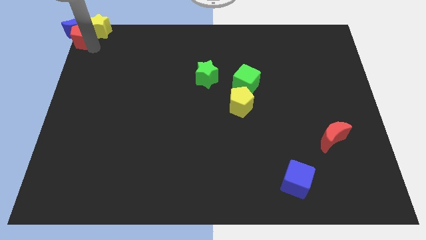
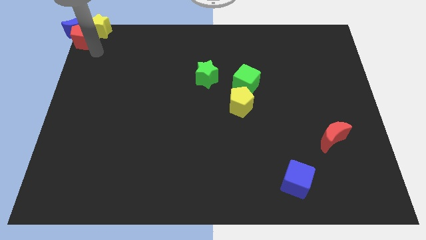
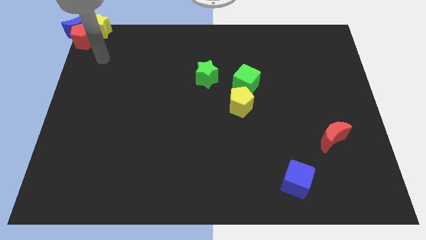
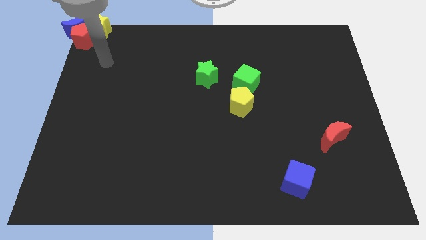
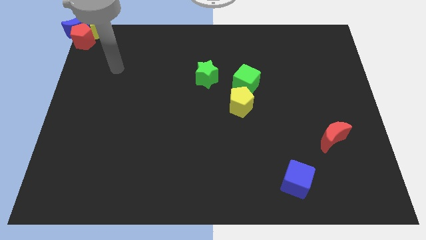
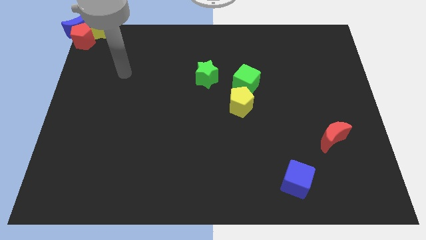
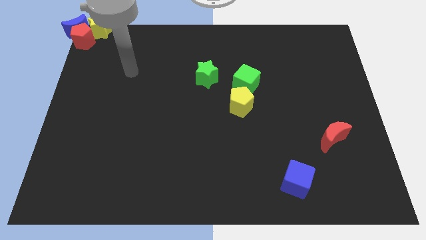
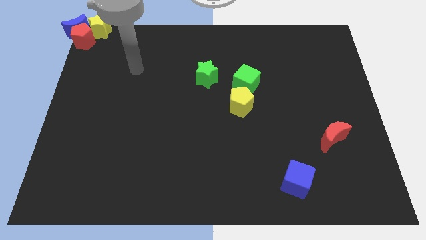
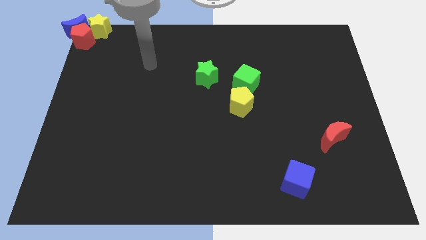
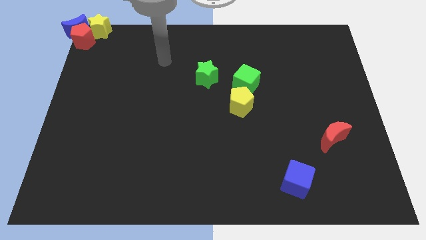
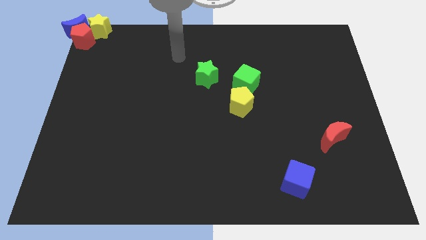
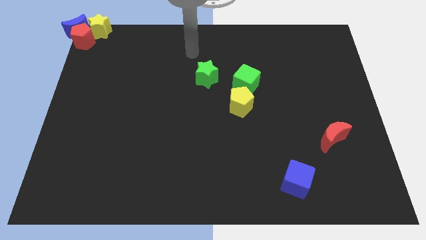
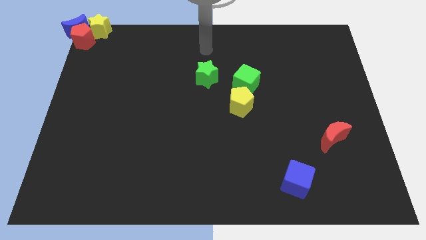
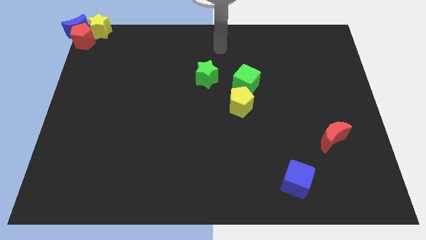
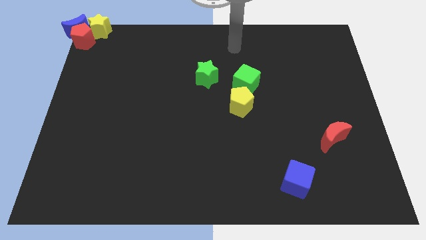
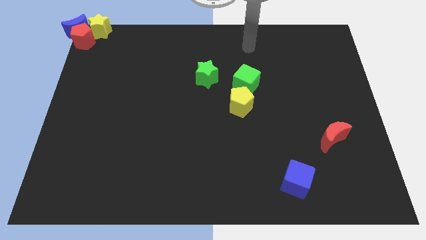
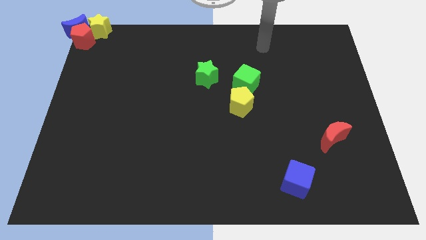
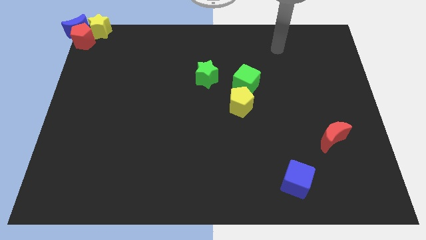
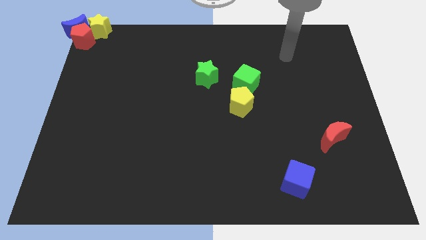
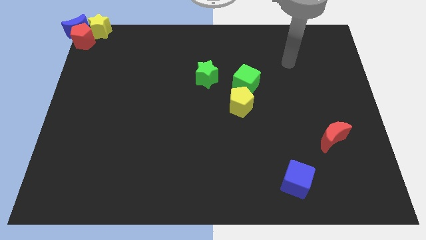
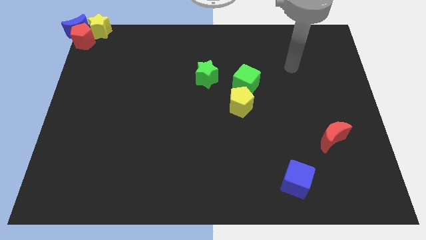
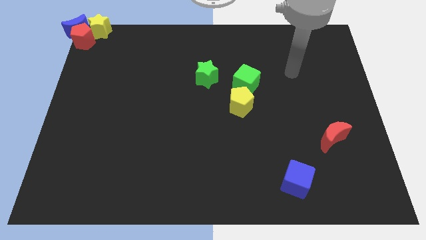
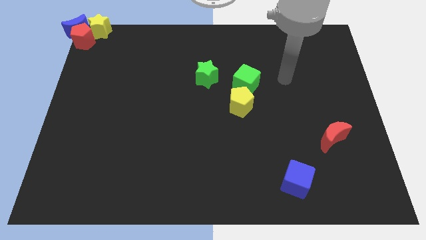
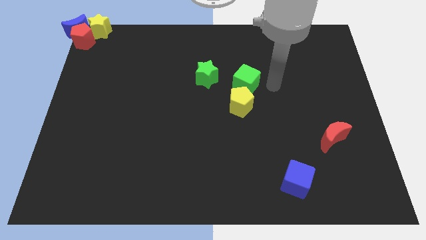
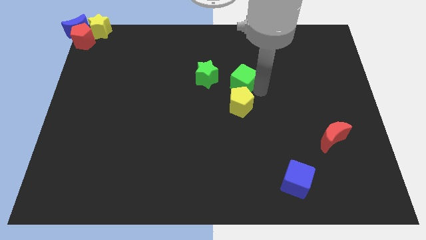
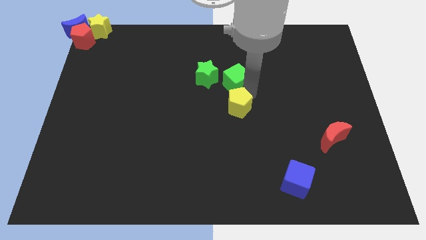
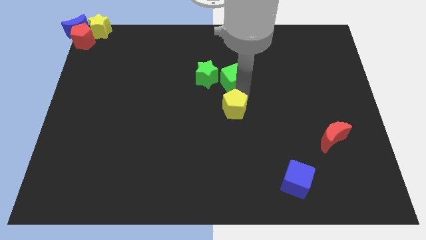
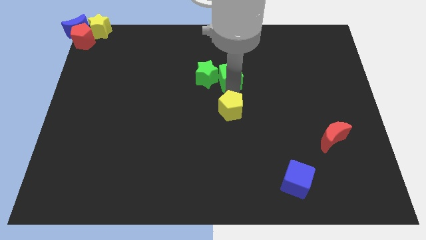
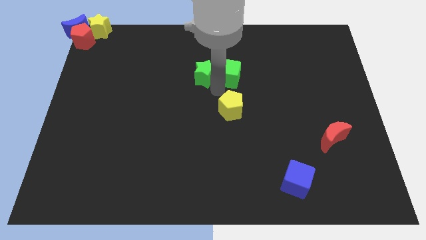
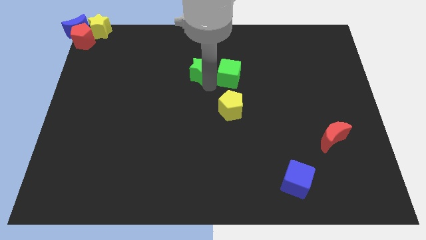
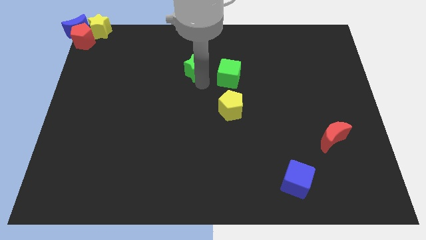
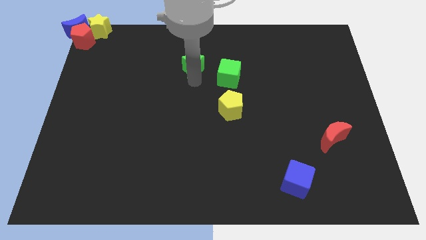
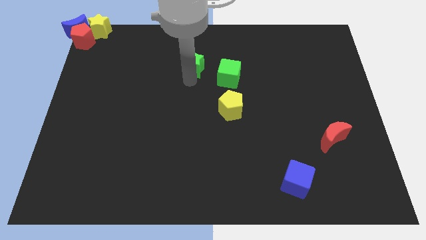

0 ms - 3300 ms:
slightly push the green blocks towards the left side of the board

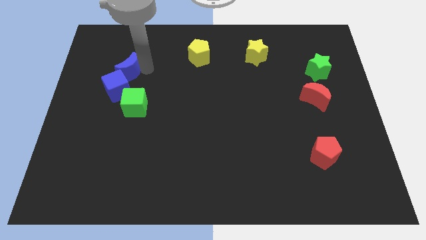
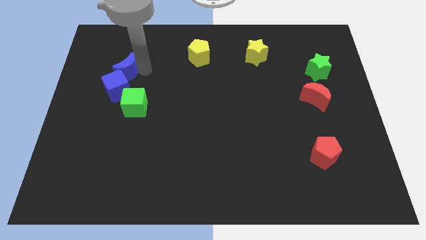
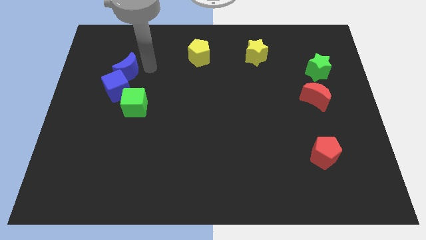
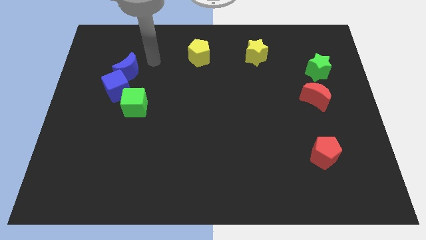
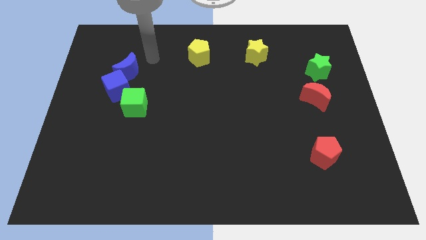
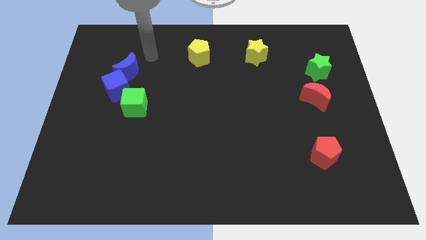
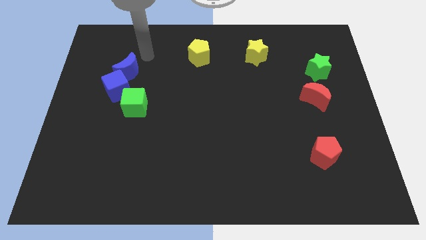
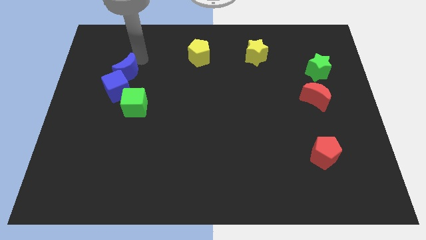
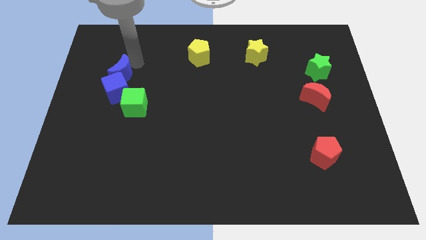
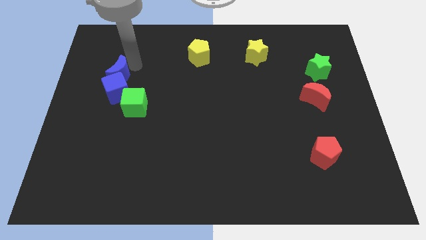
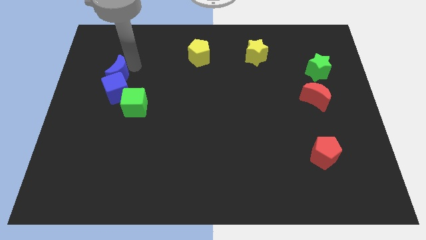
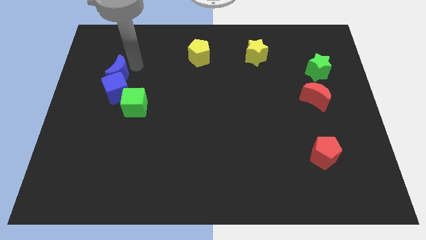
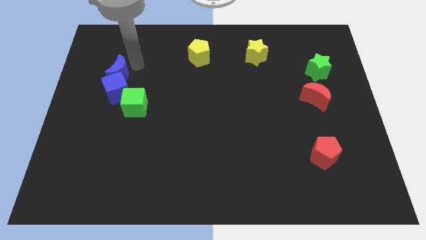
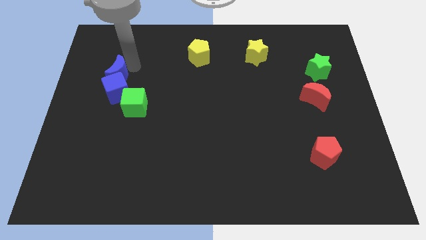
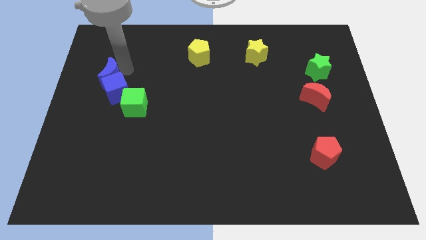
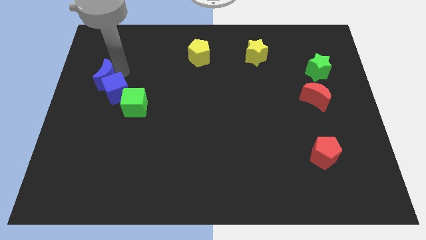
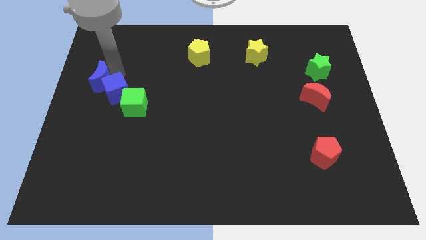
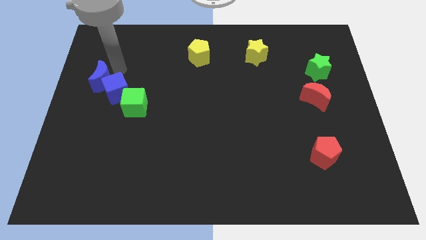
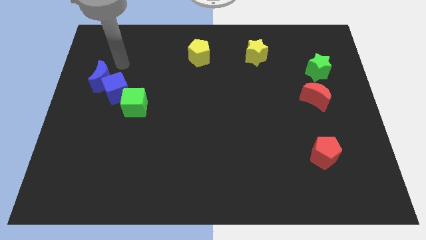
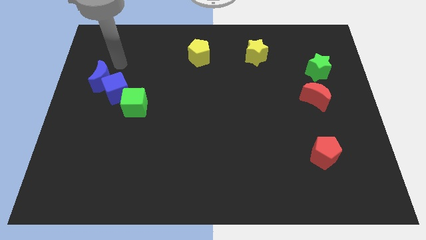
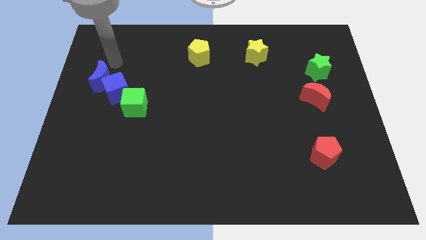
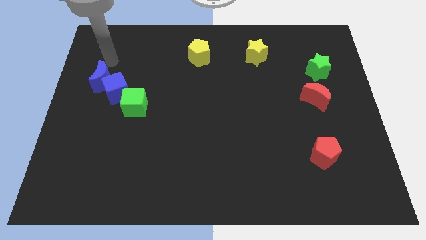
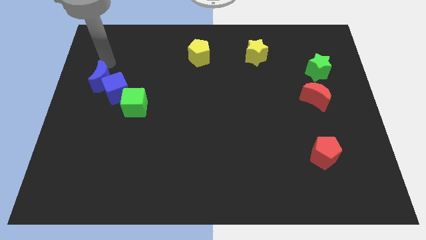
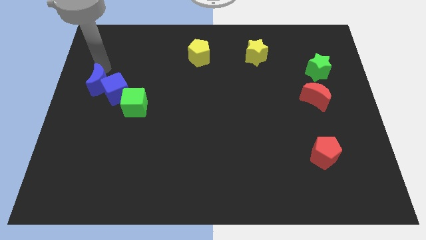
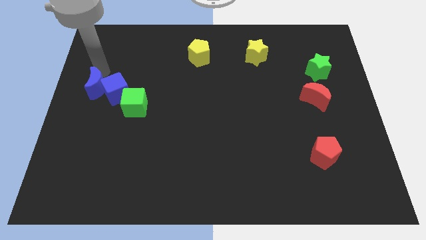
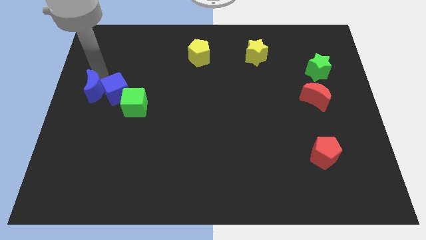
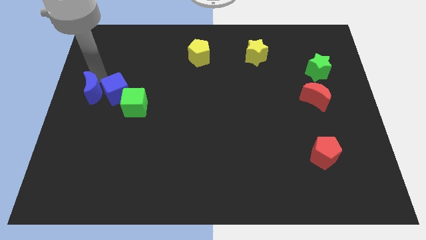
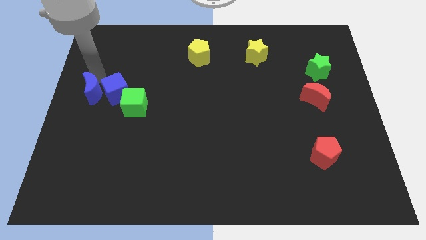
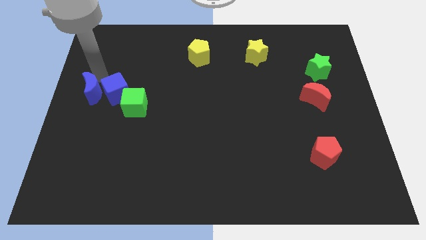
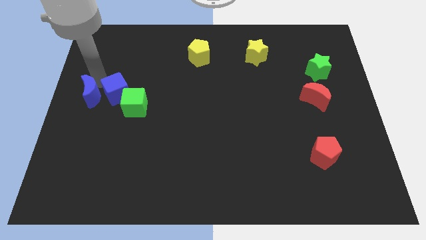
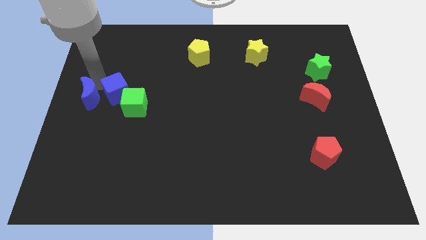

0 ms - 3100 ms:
move blue moon to left of blue cube

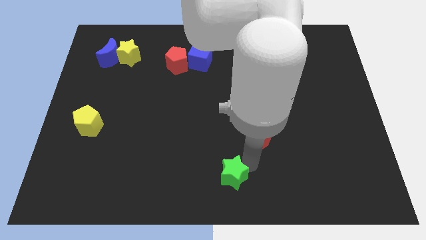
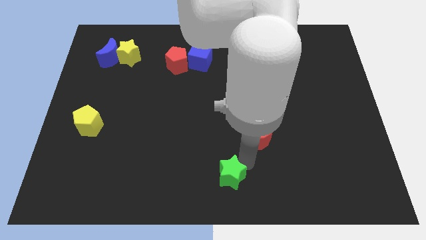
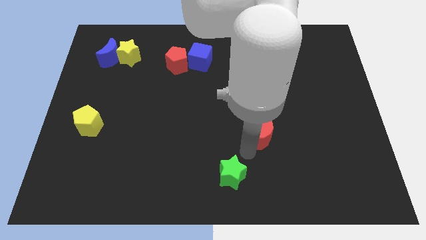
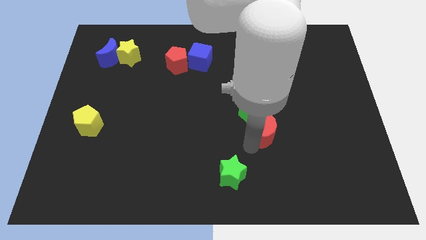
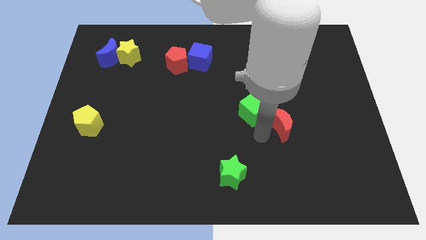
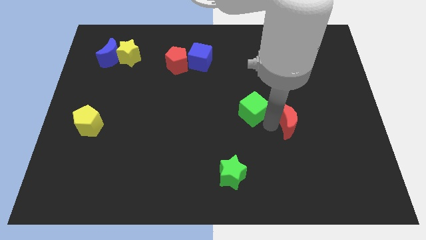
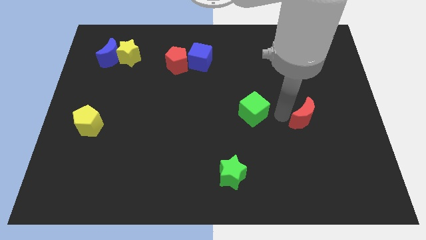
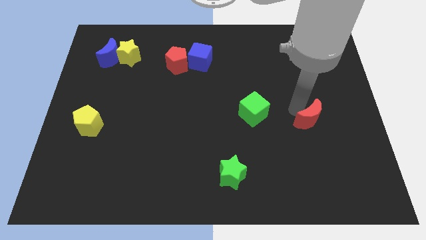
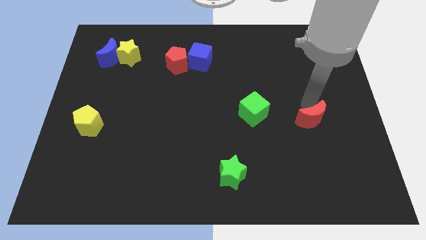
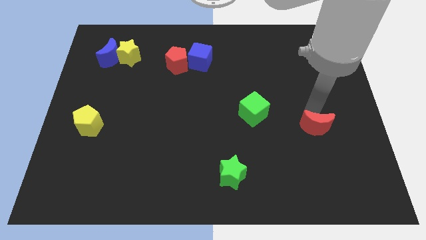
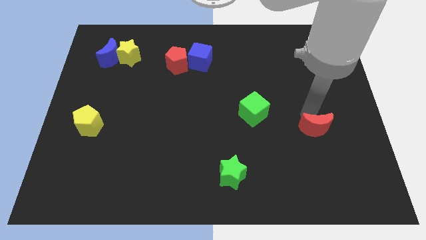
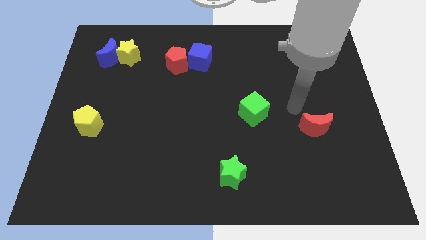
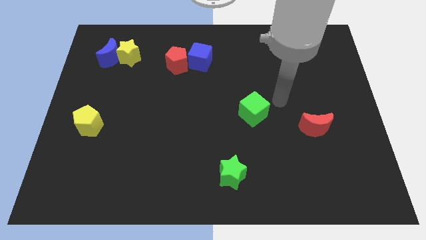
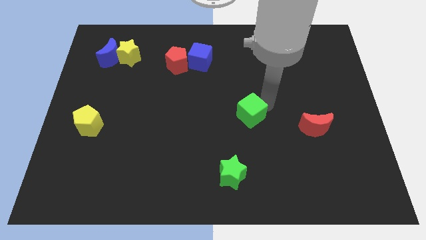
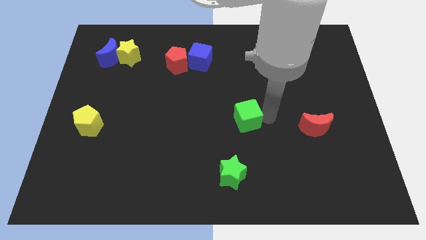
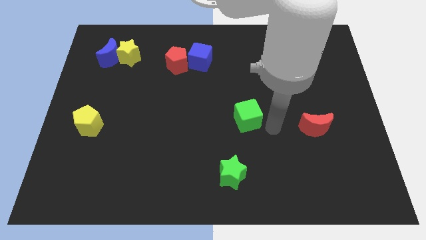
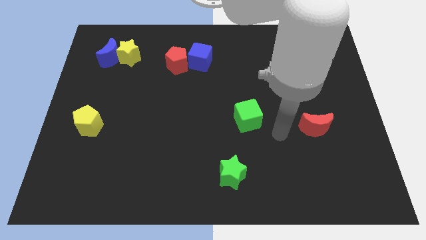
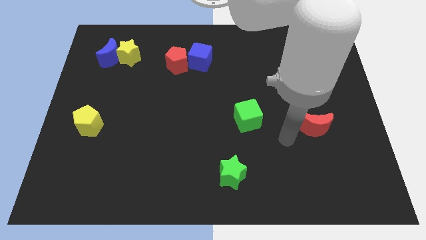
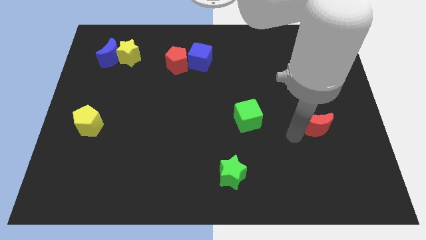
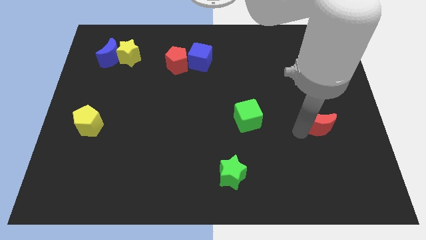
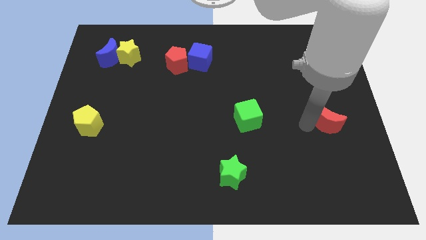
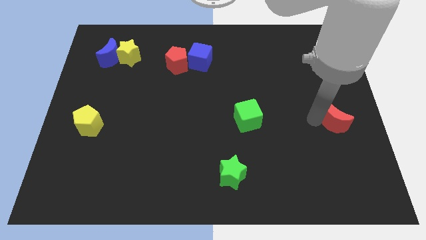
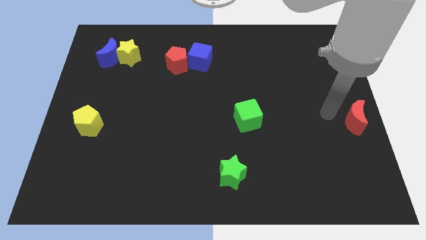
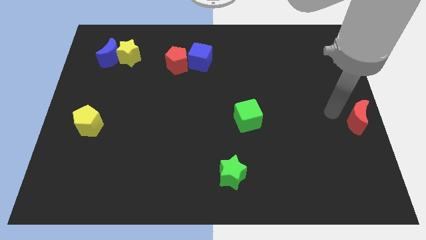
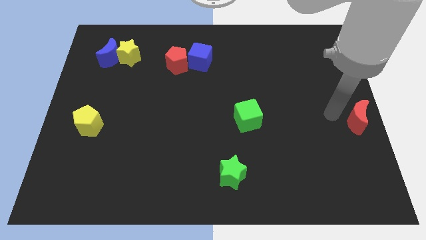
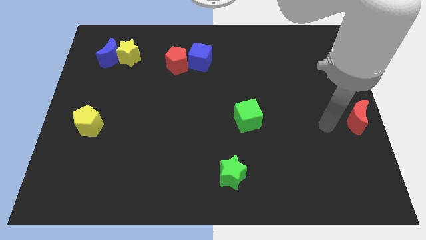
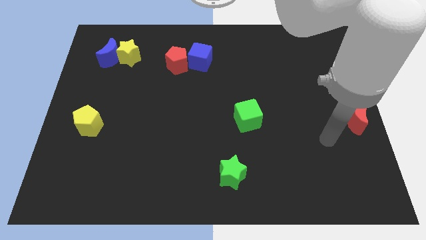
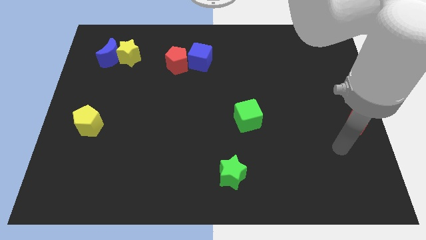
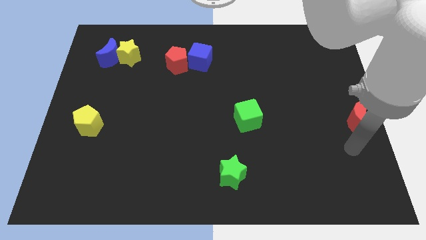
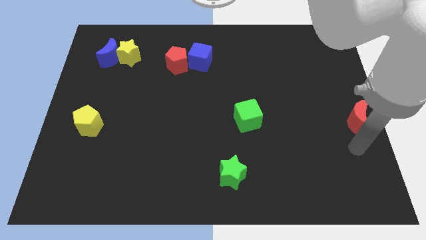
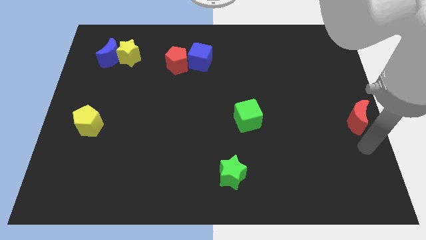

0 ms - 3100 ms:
place the red moon at the right center
